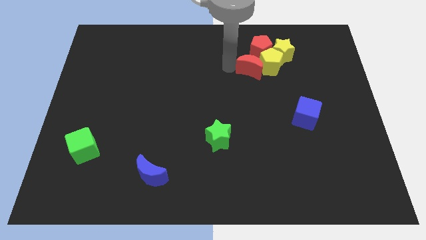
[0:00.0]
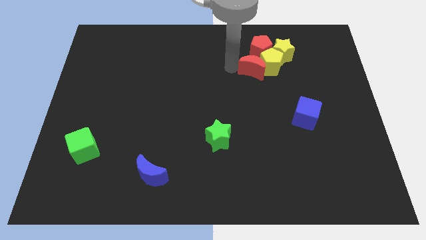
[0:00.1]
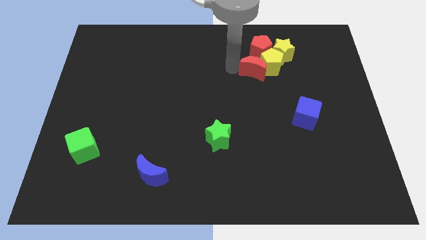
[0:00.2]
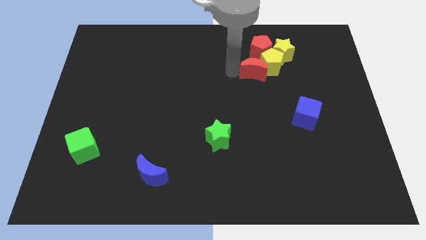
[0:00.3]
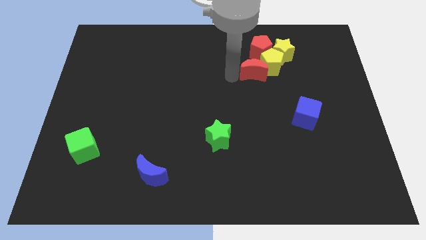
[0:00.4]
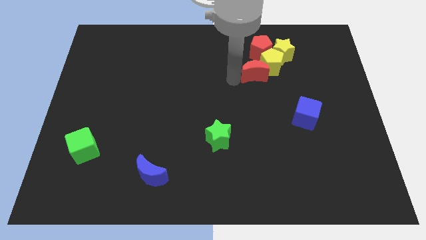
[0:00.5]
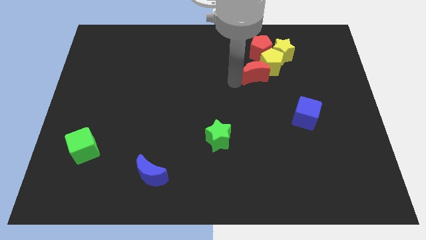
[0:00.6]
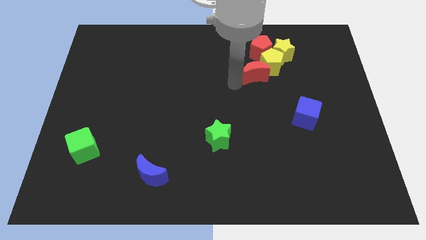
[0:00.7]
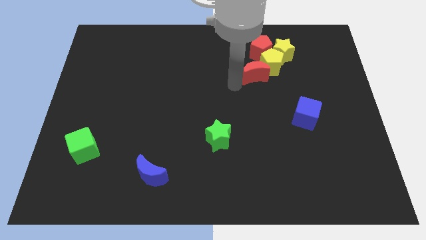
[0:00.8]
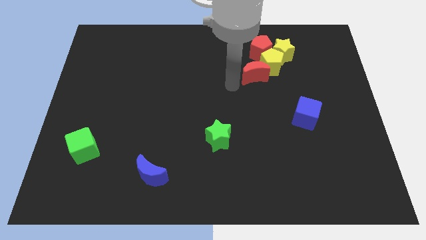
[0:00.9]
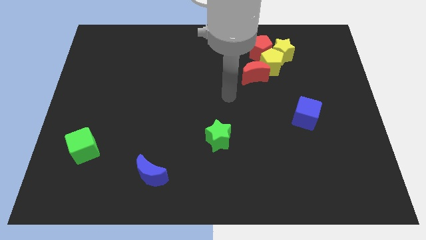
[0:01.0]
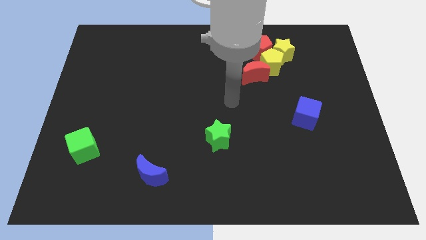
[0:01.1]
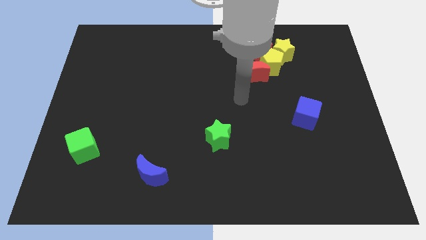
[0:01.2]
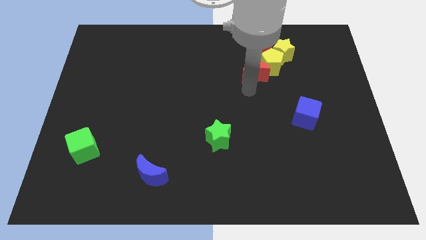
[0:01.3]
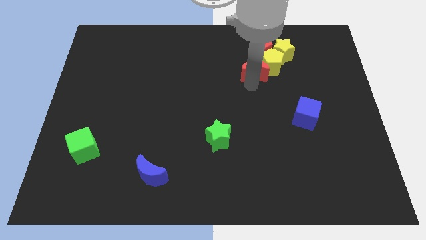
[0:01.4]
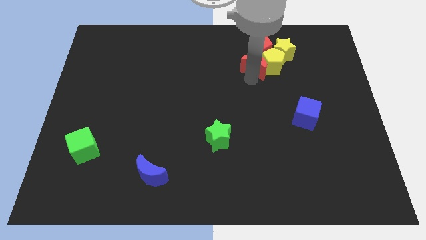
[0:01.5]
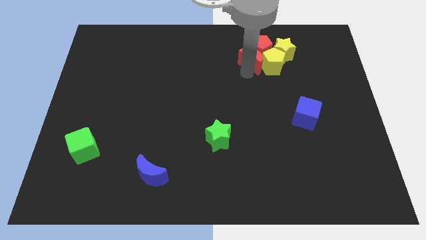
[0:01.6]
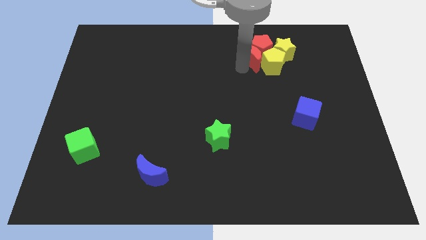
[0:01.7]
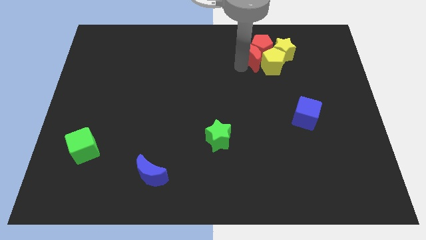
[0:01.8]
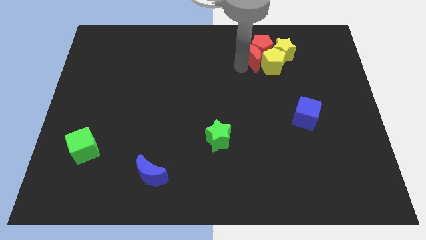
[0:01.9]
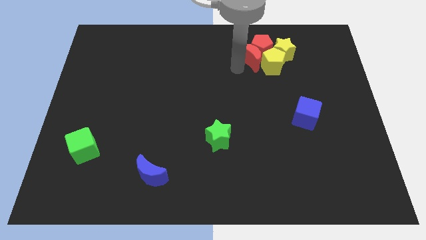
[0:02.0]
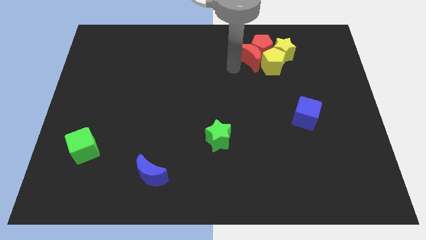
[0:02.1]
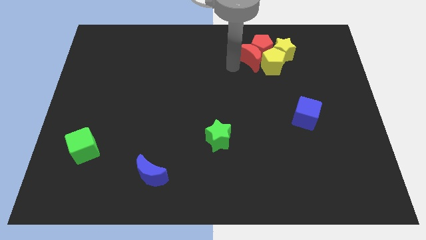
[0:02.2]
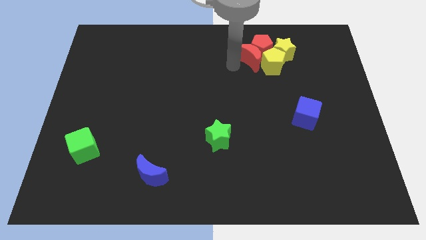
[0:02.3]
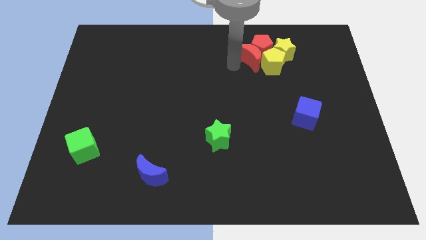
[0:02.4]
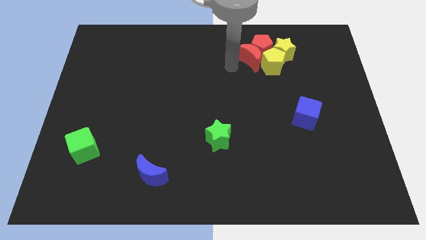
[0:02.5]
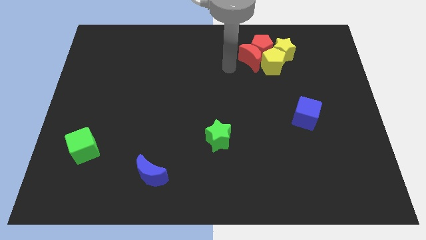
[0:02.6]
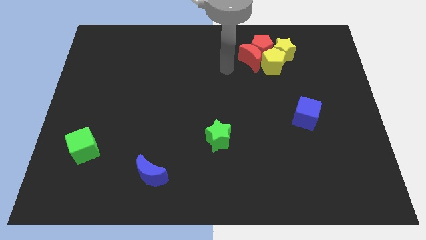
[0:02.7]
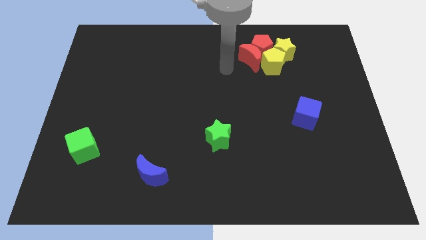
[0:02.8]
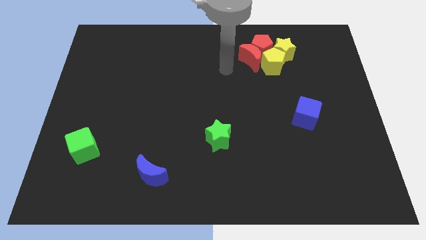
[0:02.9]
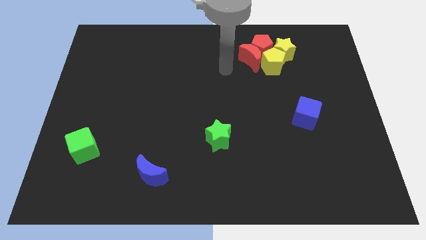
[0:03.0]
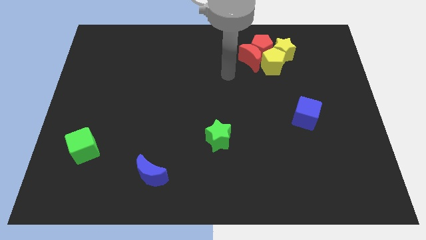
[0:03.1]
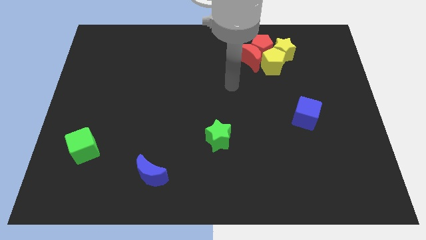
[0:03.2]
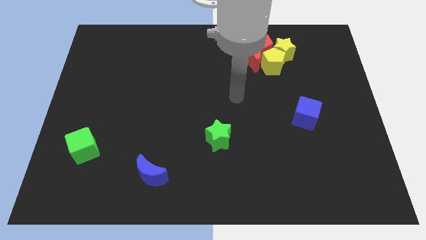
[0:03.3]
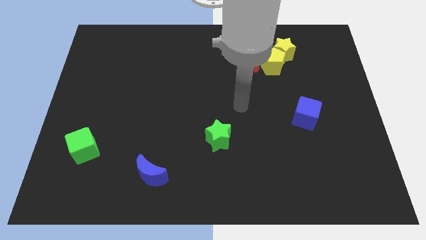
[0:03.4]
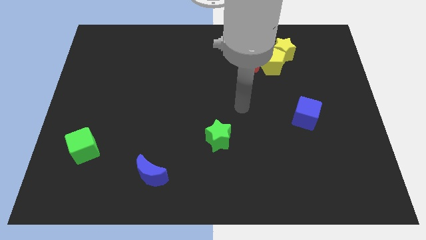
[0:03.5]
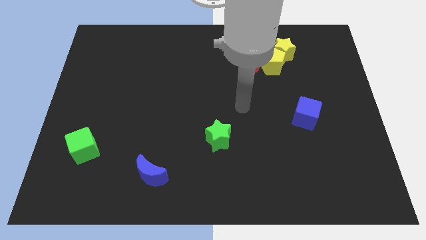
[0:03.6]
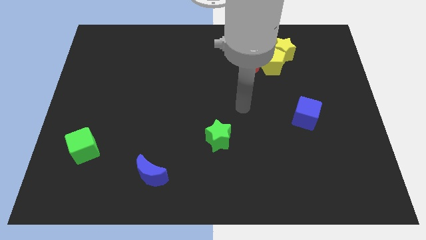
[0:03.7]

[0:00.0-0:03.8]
push the red crescent into the red pentagon

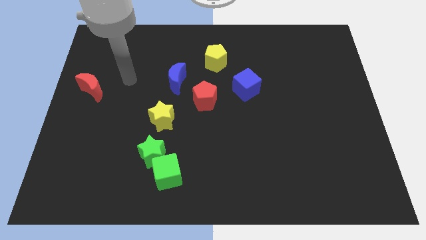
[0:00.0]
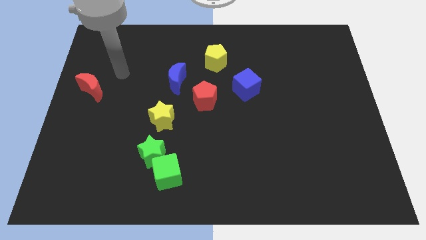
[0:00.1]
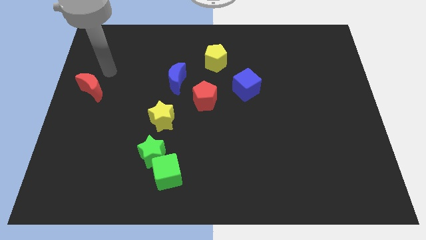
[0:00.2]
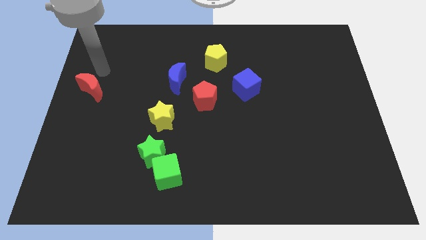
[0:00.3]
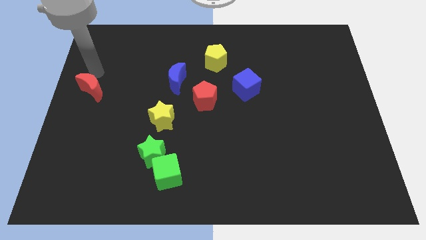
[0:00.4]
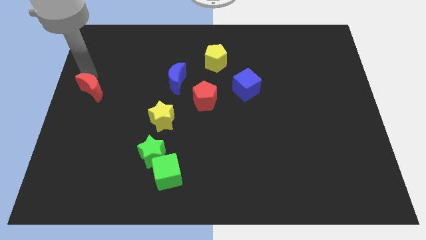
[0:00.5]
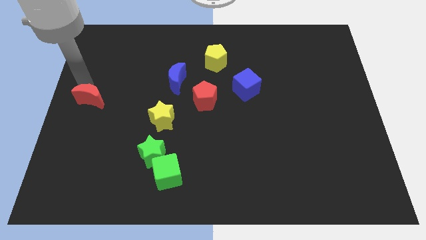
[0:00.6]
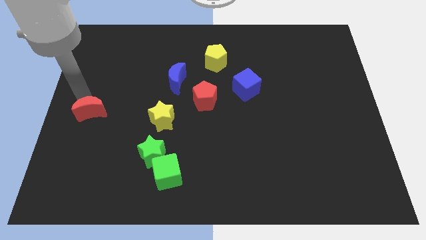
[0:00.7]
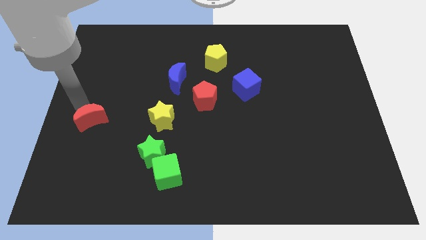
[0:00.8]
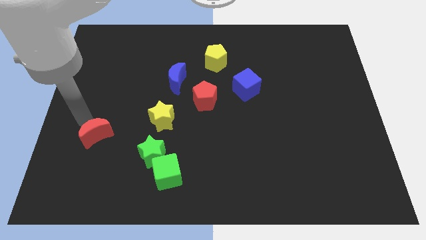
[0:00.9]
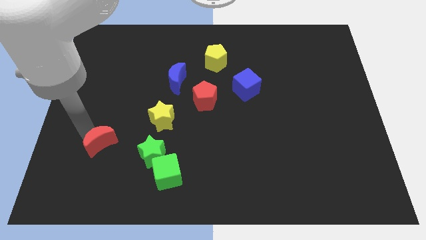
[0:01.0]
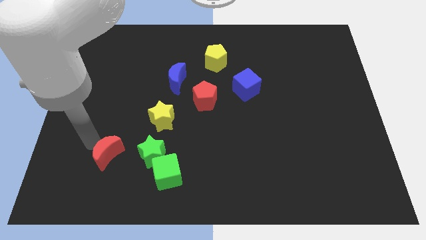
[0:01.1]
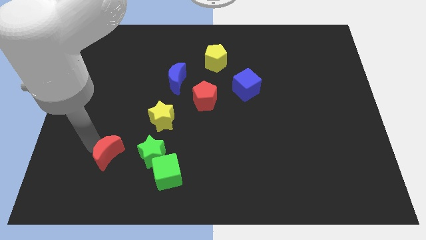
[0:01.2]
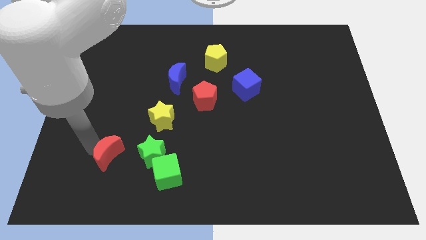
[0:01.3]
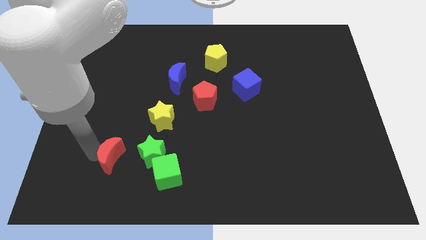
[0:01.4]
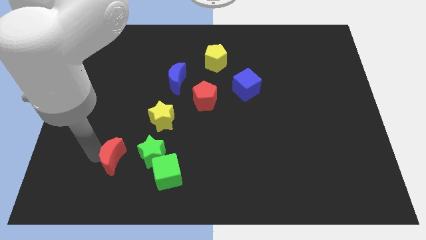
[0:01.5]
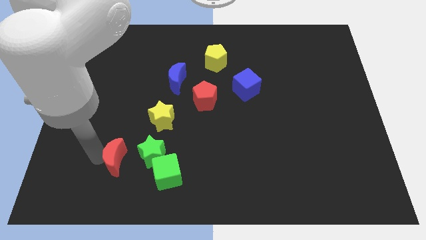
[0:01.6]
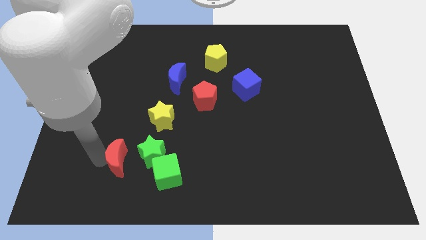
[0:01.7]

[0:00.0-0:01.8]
move the red crescent to the left side of the green star

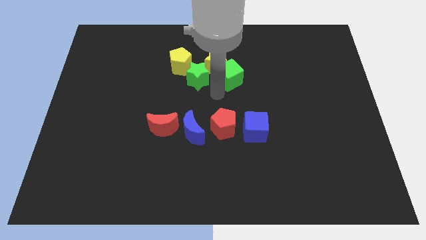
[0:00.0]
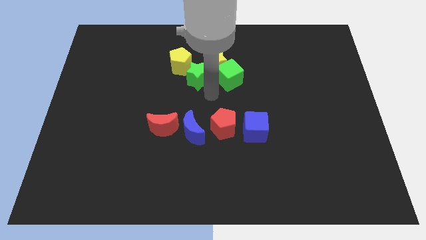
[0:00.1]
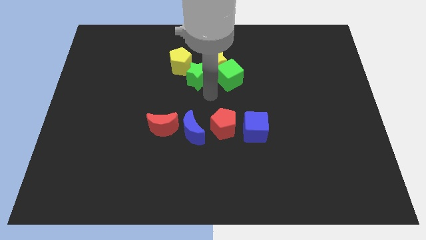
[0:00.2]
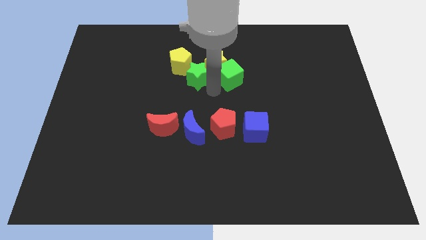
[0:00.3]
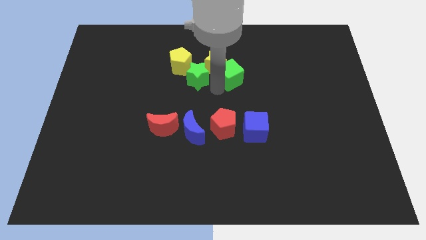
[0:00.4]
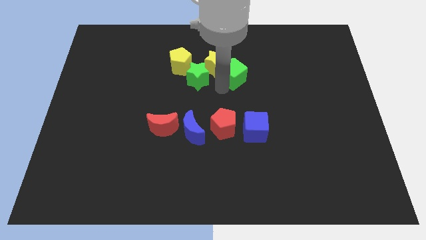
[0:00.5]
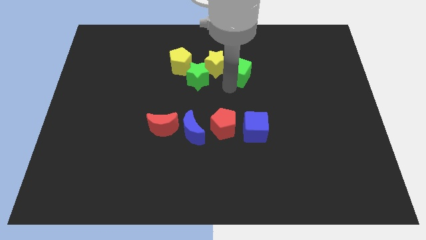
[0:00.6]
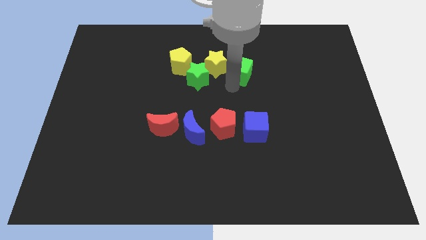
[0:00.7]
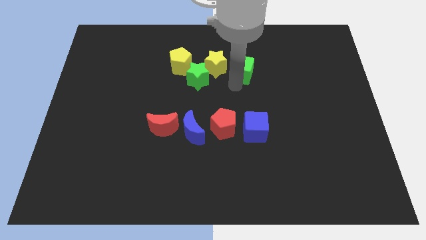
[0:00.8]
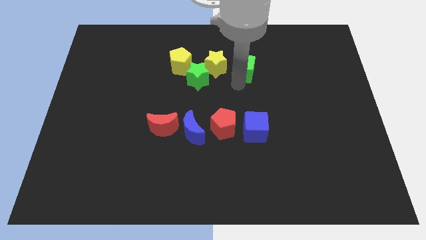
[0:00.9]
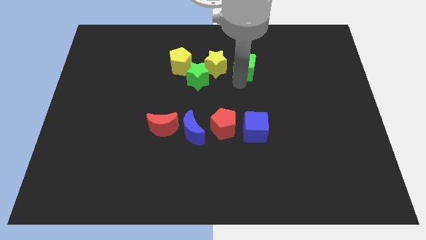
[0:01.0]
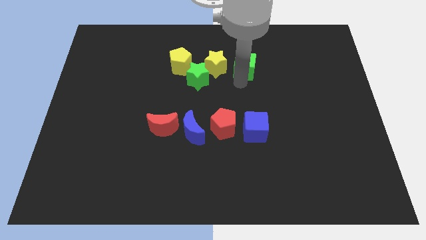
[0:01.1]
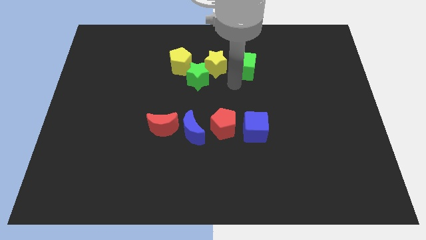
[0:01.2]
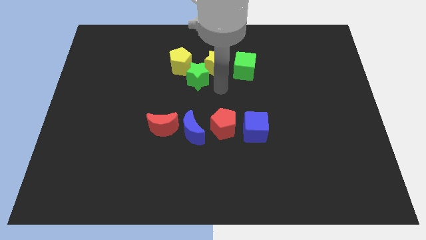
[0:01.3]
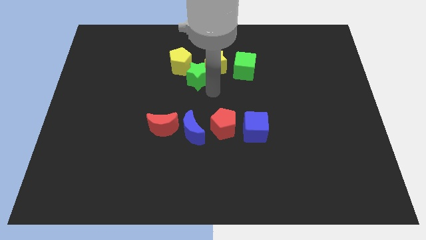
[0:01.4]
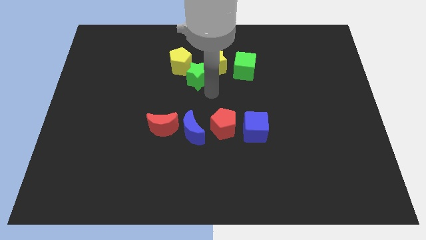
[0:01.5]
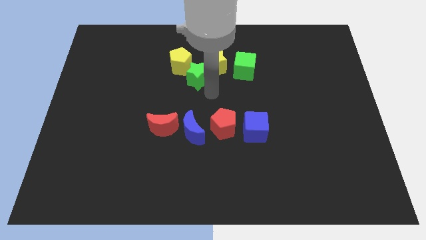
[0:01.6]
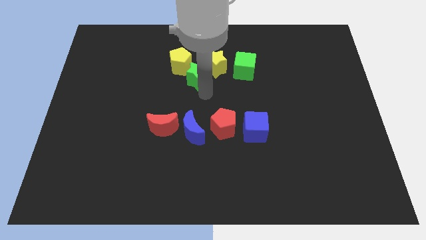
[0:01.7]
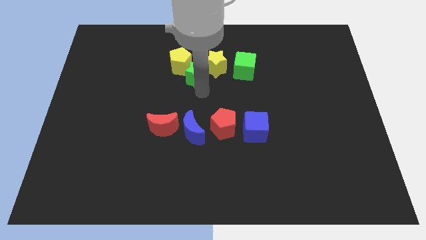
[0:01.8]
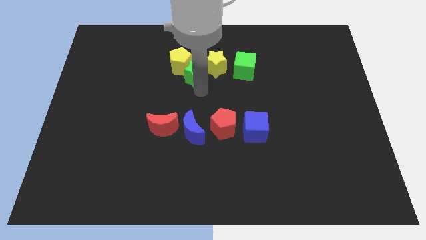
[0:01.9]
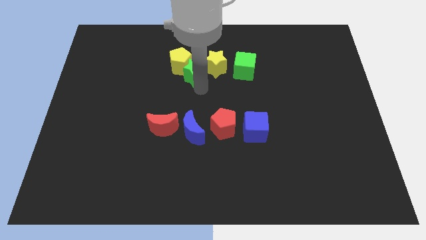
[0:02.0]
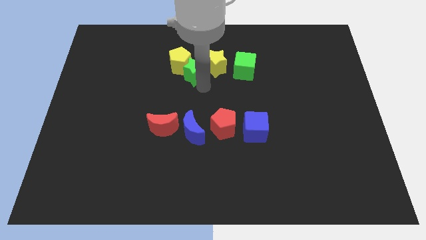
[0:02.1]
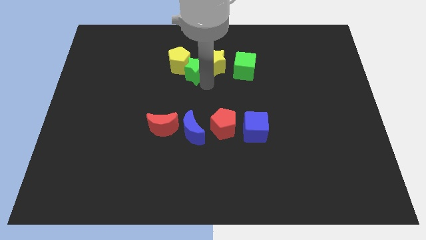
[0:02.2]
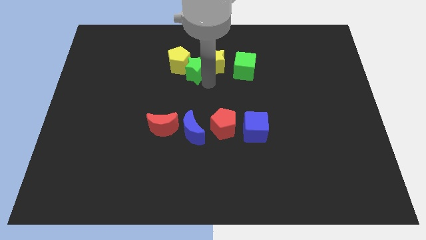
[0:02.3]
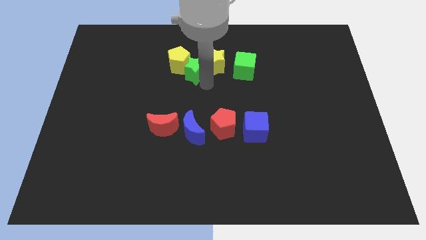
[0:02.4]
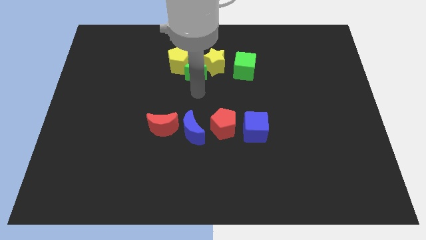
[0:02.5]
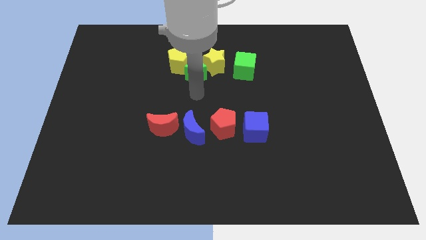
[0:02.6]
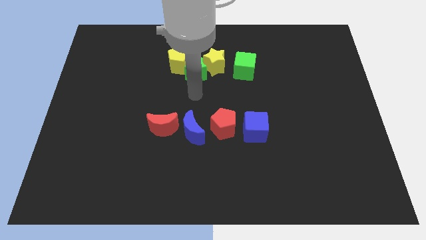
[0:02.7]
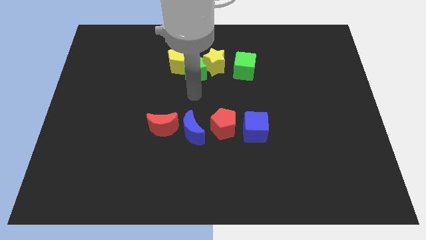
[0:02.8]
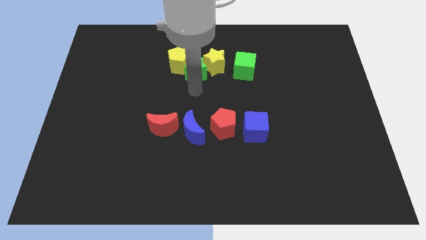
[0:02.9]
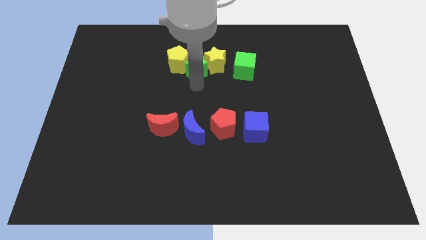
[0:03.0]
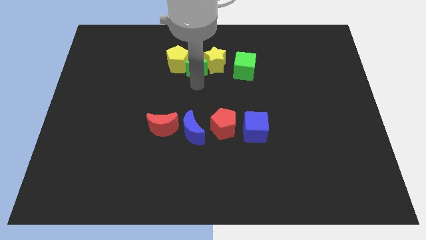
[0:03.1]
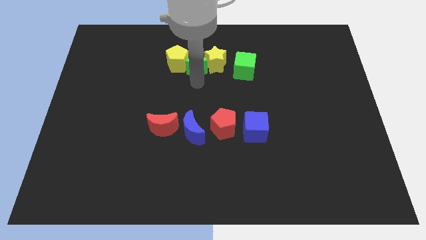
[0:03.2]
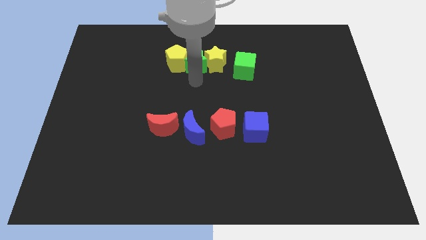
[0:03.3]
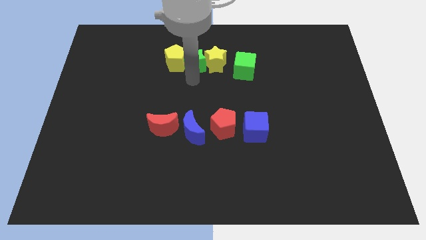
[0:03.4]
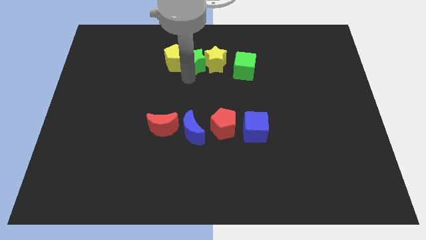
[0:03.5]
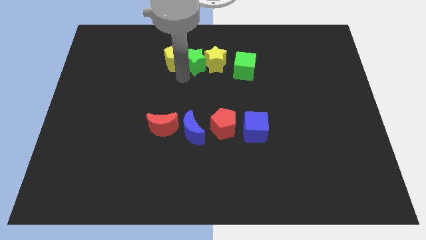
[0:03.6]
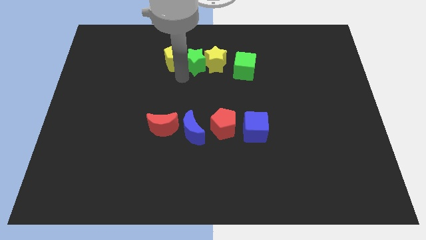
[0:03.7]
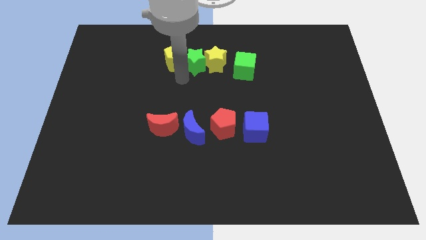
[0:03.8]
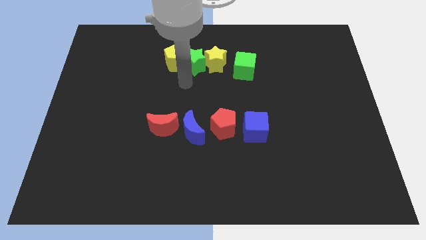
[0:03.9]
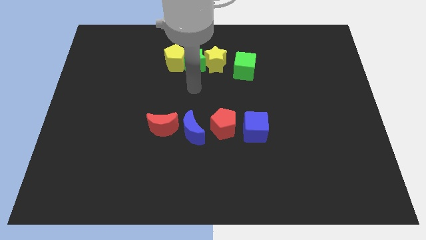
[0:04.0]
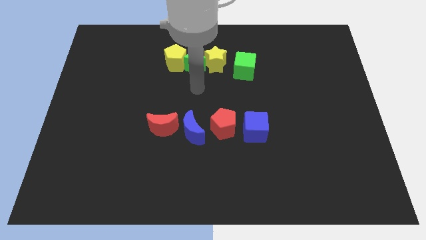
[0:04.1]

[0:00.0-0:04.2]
push the green star in between yellow pentagon and yellow star
